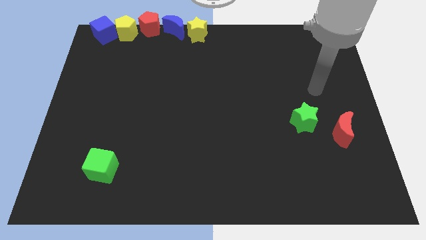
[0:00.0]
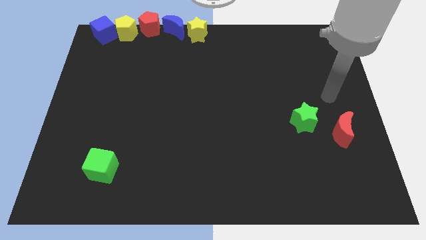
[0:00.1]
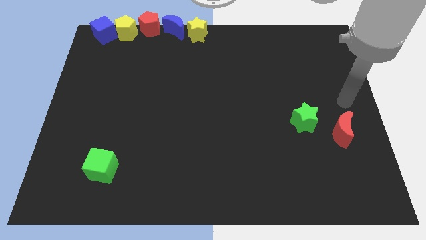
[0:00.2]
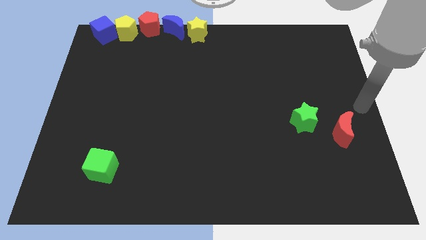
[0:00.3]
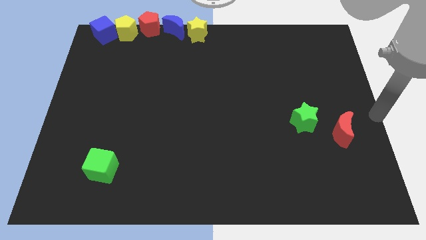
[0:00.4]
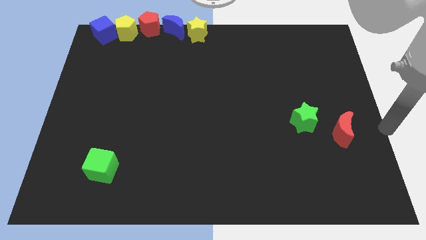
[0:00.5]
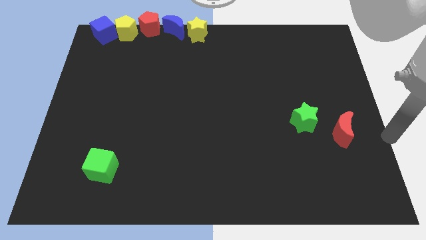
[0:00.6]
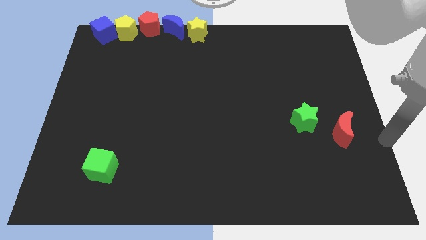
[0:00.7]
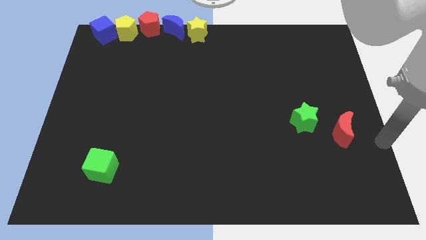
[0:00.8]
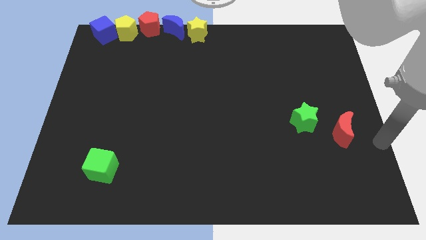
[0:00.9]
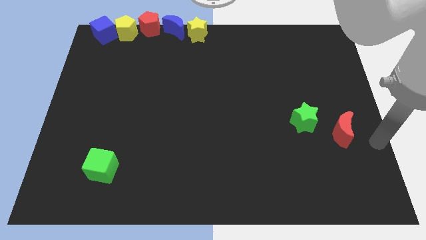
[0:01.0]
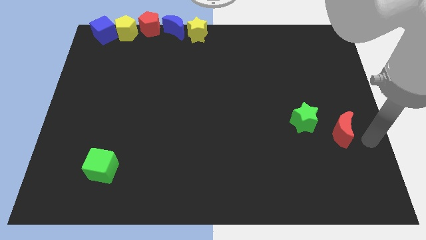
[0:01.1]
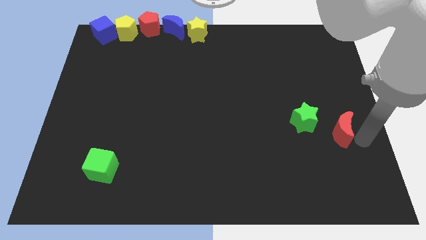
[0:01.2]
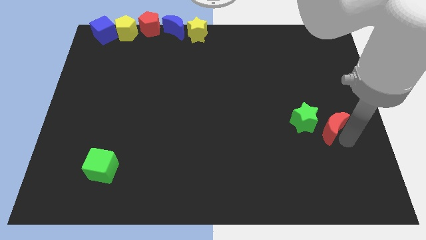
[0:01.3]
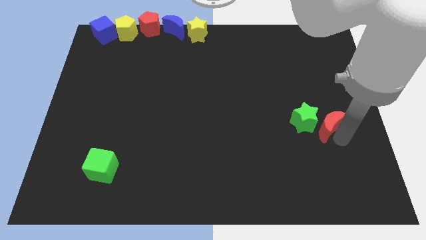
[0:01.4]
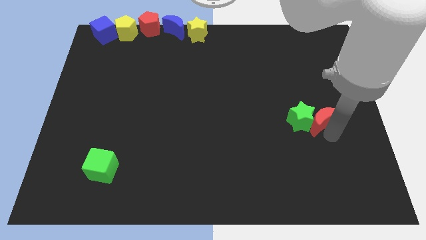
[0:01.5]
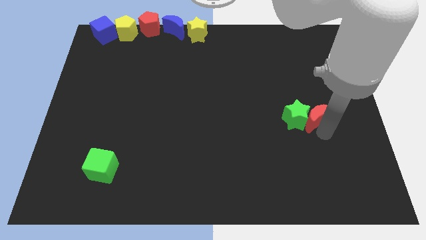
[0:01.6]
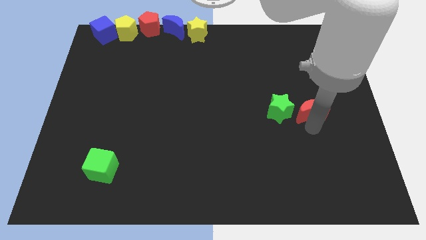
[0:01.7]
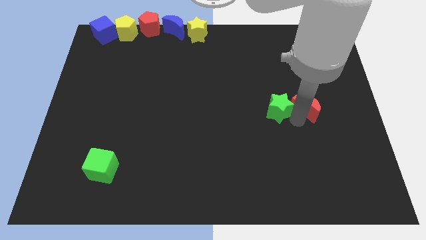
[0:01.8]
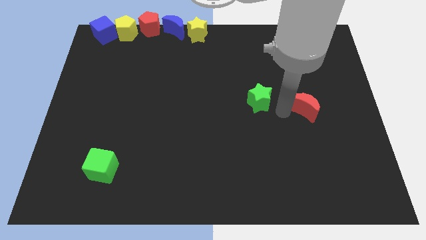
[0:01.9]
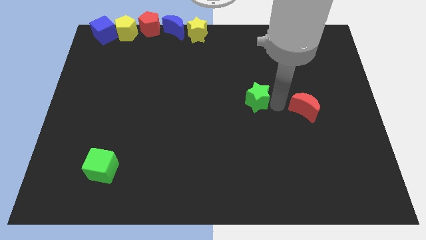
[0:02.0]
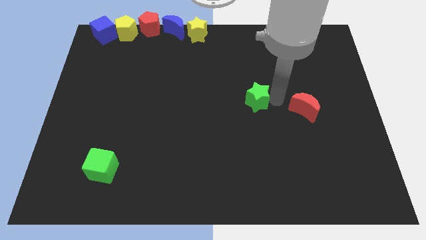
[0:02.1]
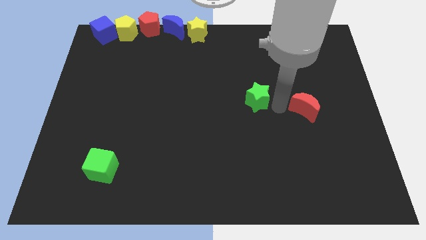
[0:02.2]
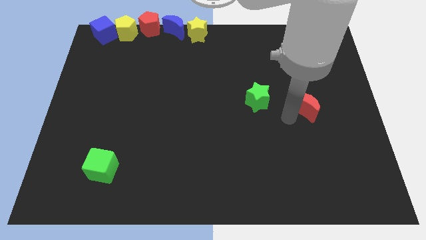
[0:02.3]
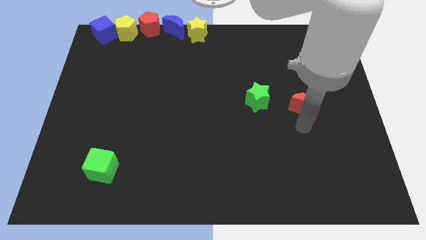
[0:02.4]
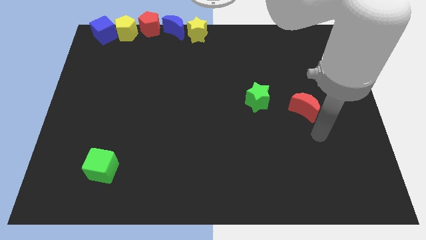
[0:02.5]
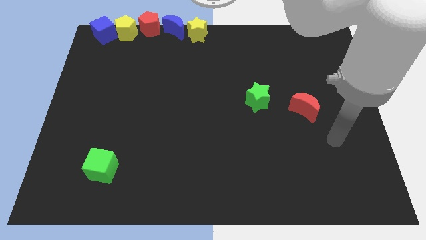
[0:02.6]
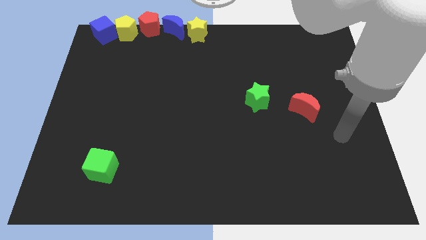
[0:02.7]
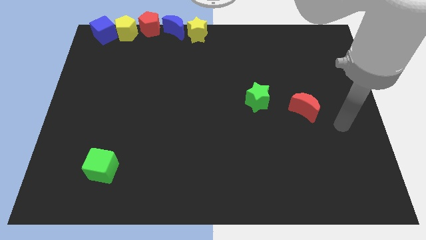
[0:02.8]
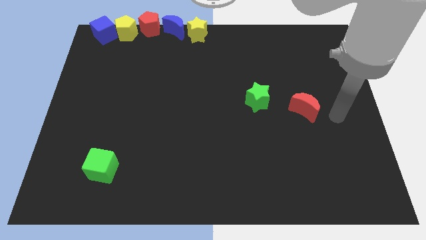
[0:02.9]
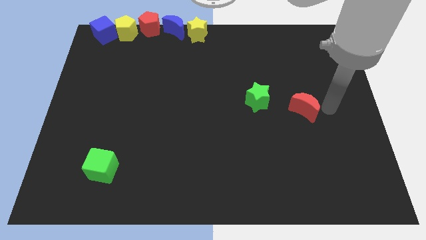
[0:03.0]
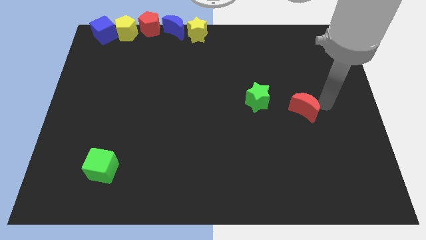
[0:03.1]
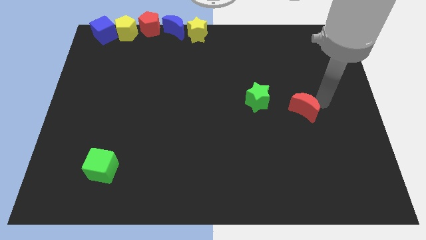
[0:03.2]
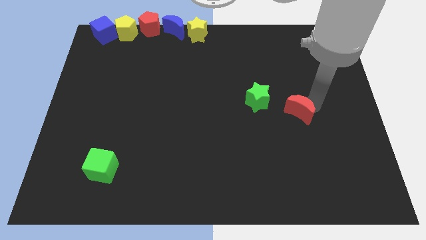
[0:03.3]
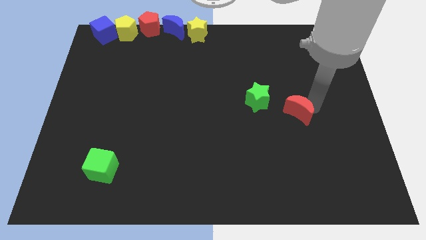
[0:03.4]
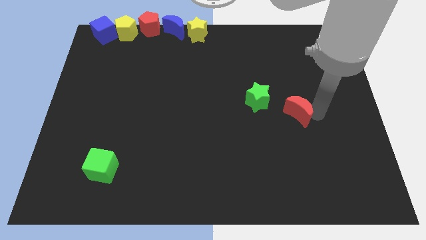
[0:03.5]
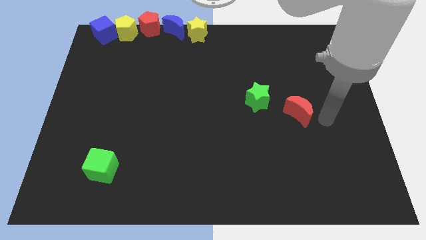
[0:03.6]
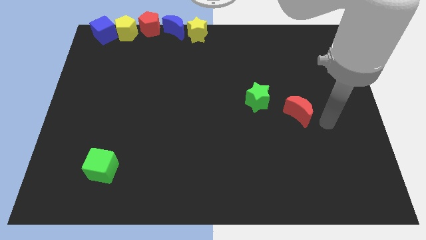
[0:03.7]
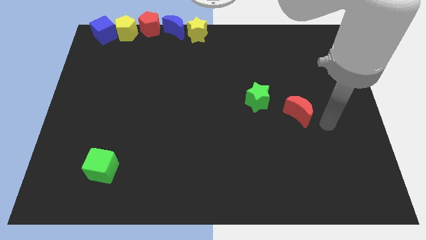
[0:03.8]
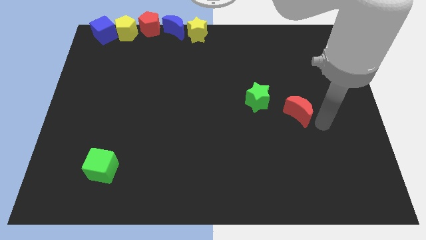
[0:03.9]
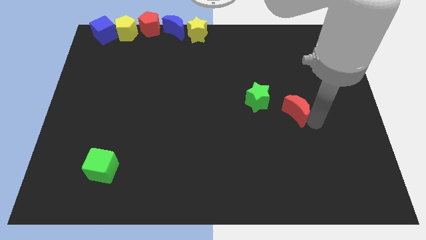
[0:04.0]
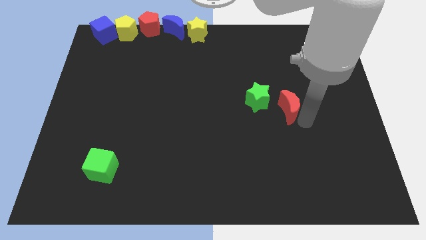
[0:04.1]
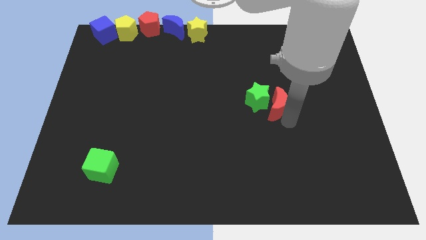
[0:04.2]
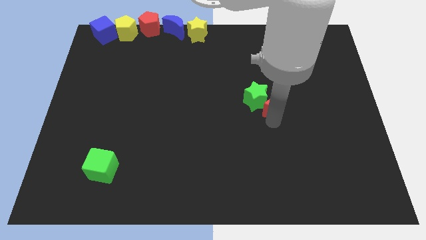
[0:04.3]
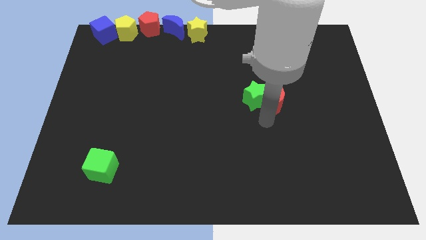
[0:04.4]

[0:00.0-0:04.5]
move the red crescent along with the green star slightly to the left

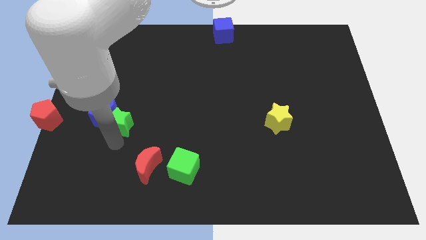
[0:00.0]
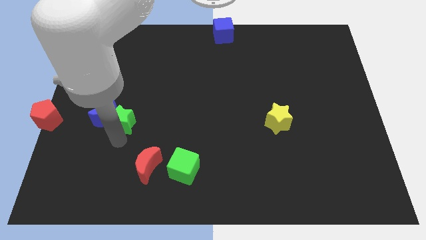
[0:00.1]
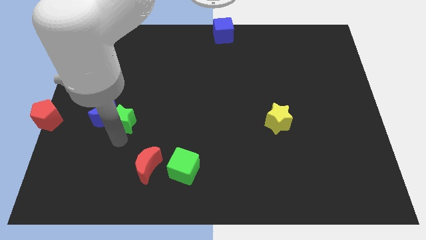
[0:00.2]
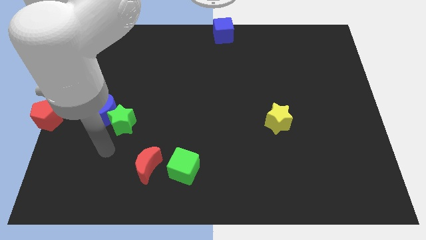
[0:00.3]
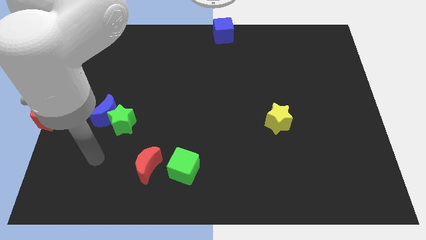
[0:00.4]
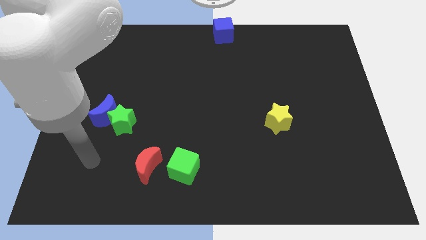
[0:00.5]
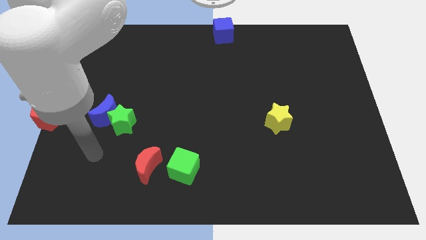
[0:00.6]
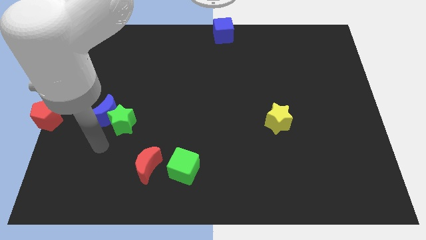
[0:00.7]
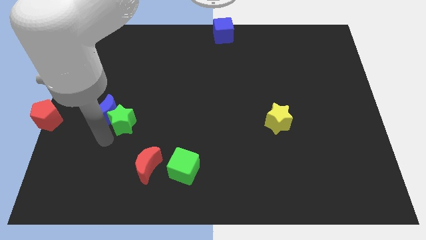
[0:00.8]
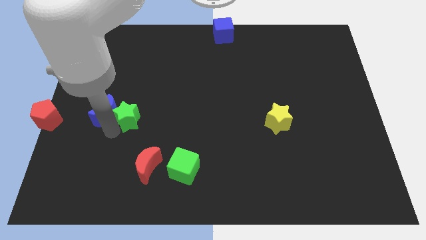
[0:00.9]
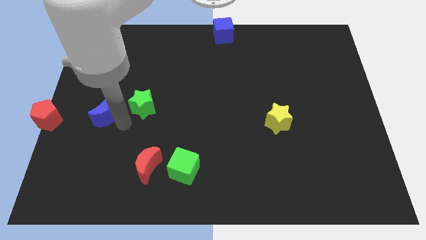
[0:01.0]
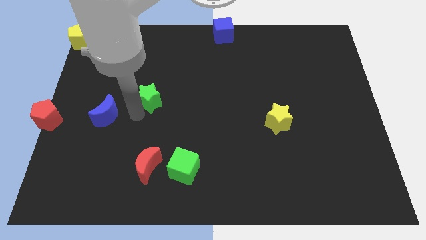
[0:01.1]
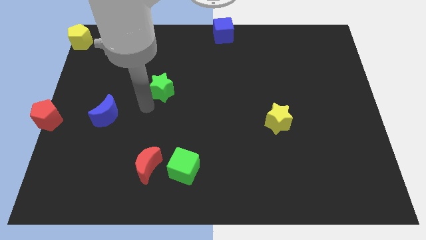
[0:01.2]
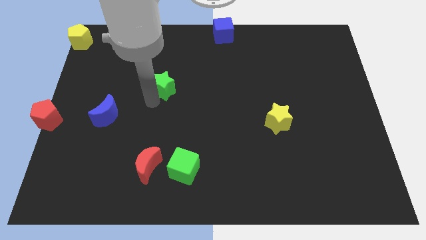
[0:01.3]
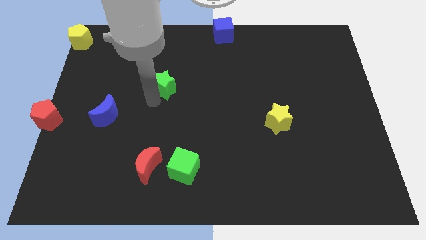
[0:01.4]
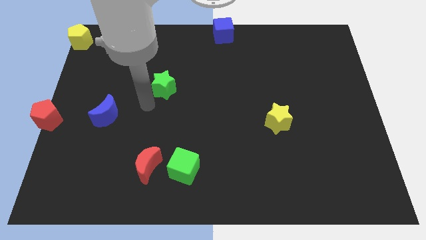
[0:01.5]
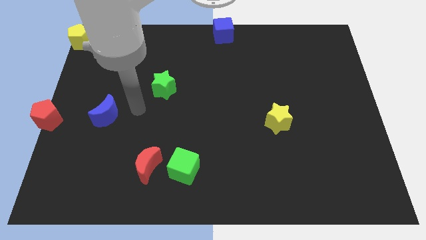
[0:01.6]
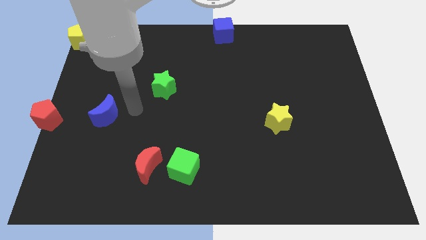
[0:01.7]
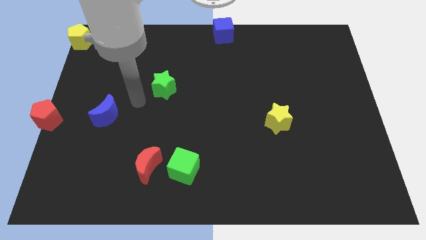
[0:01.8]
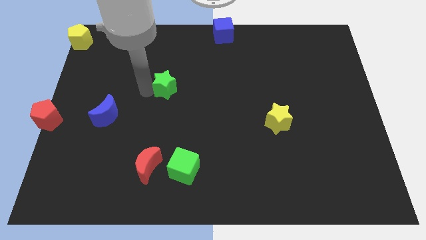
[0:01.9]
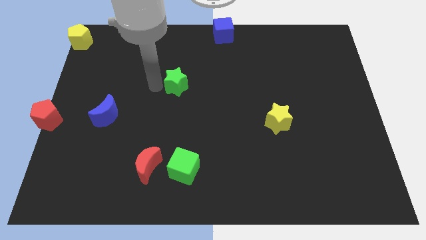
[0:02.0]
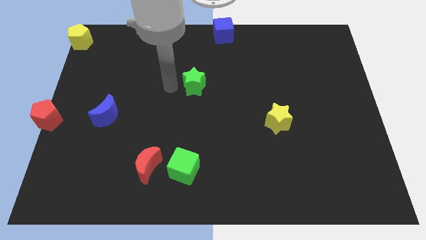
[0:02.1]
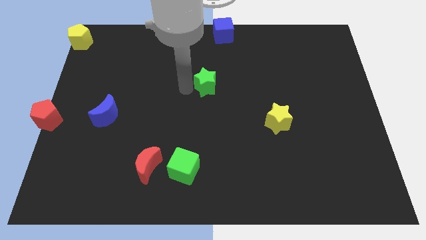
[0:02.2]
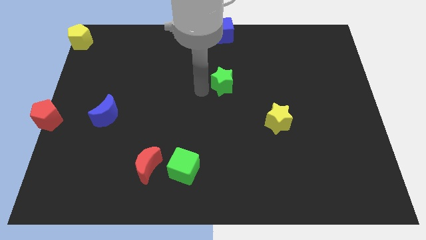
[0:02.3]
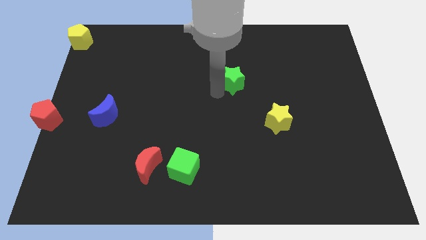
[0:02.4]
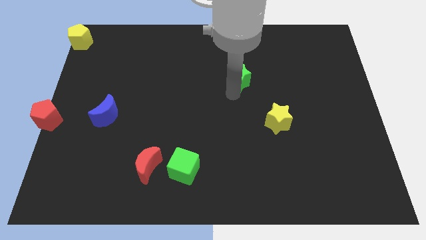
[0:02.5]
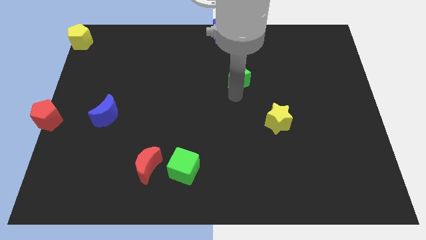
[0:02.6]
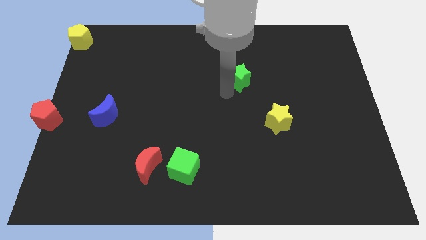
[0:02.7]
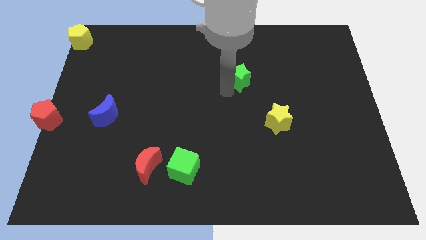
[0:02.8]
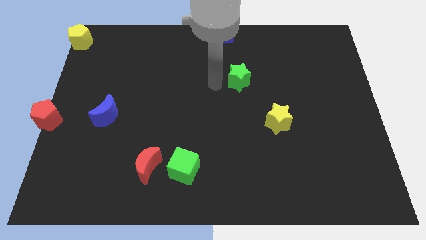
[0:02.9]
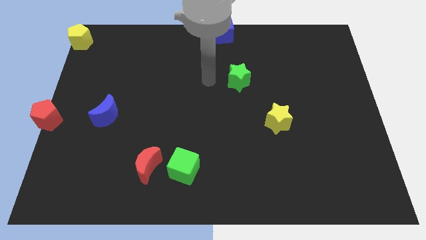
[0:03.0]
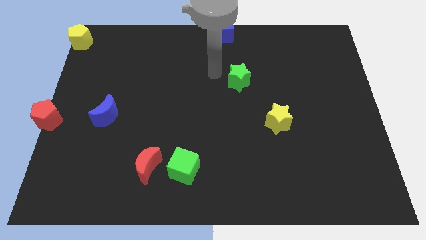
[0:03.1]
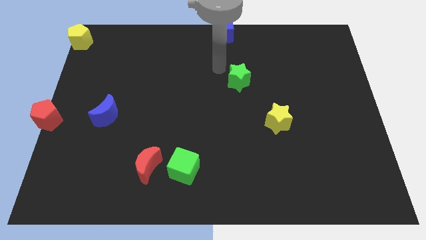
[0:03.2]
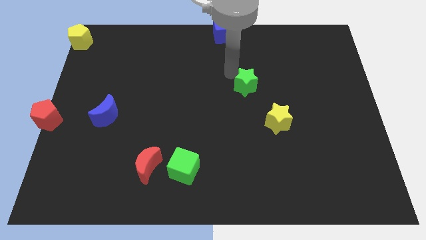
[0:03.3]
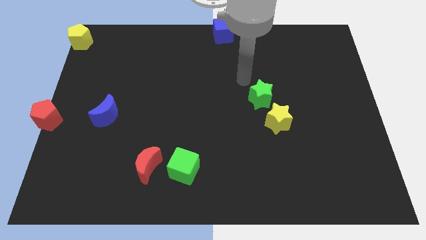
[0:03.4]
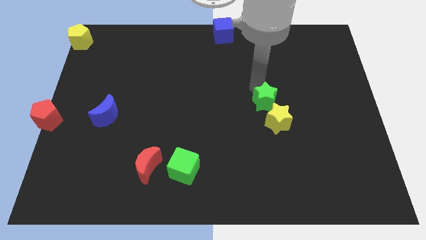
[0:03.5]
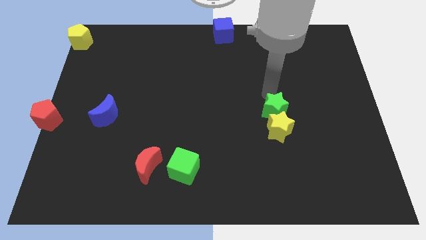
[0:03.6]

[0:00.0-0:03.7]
push the green star into the yellow star

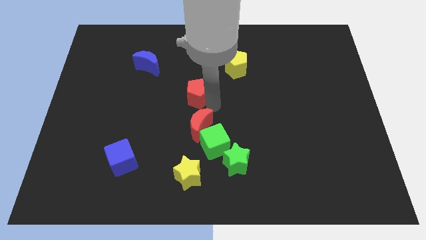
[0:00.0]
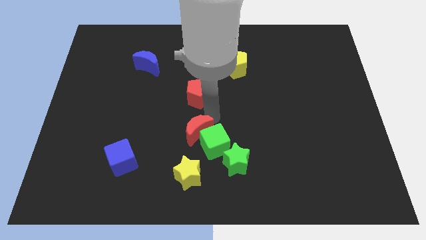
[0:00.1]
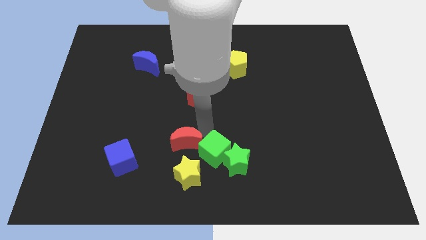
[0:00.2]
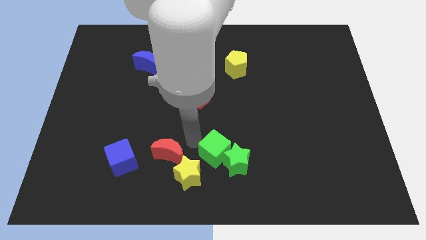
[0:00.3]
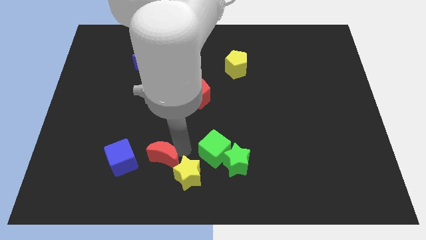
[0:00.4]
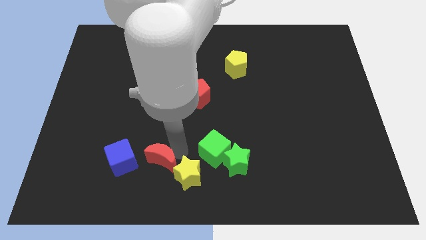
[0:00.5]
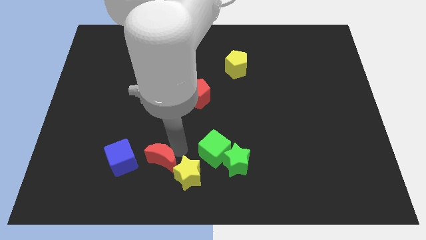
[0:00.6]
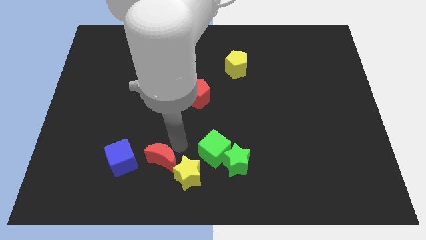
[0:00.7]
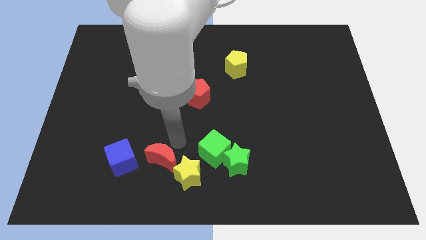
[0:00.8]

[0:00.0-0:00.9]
slide the red crescent down slightly
